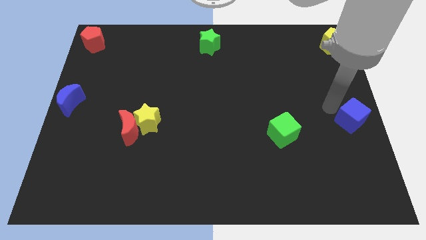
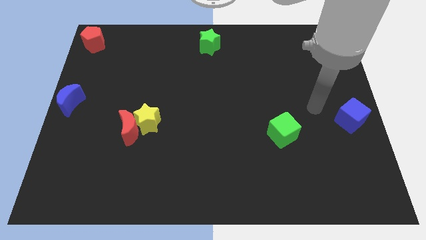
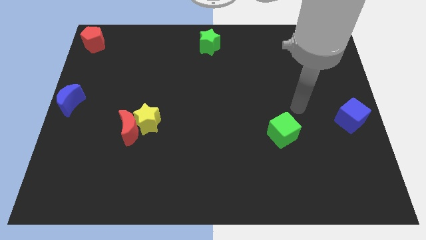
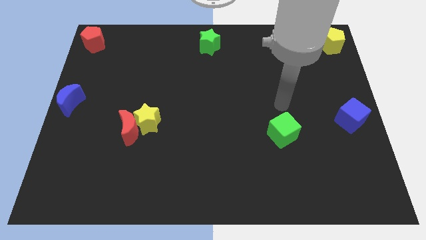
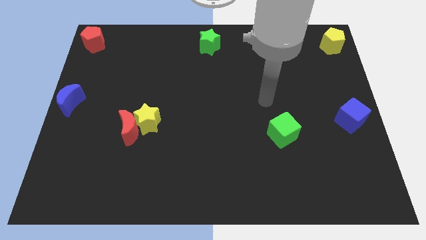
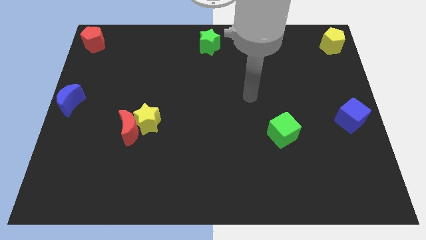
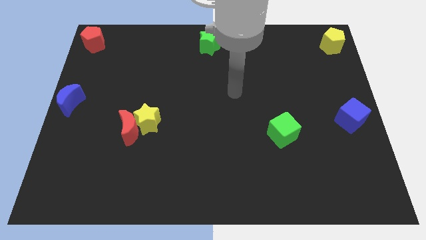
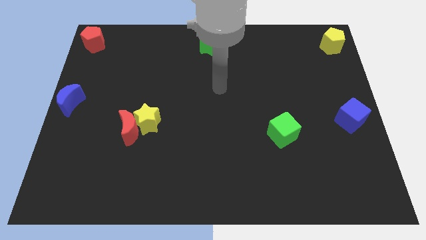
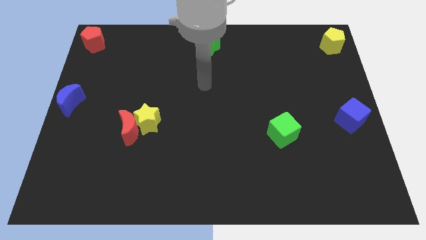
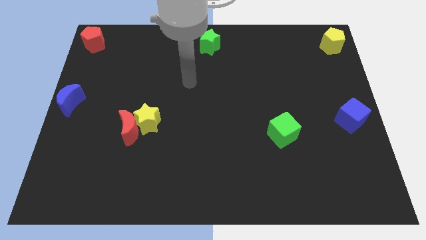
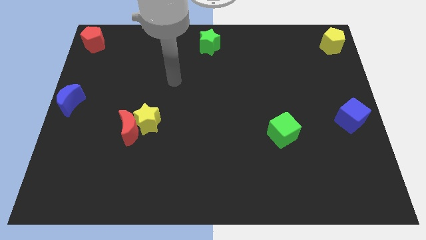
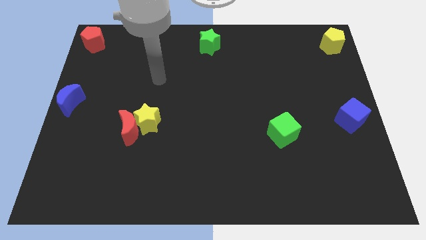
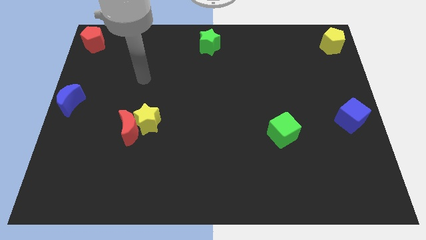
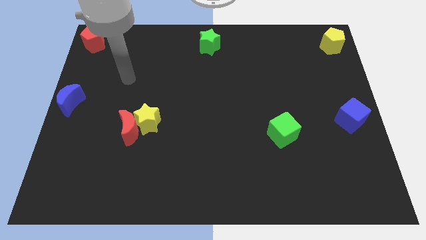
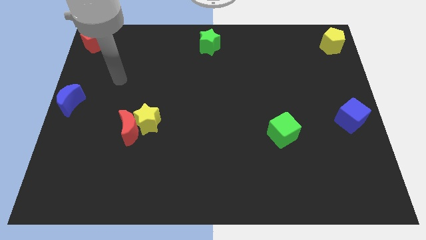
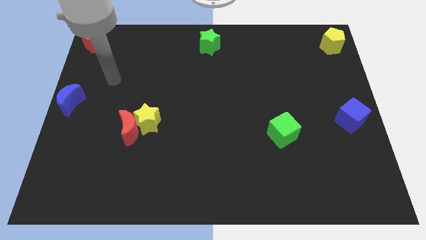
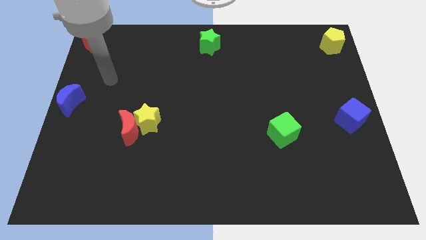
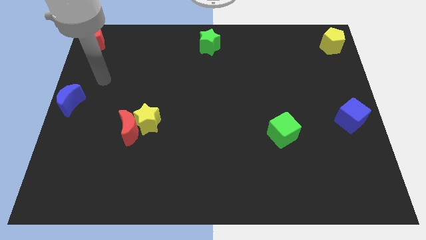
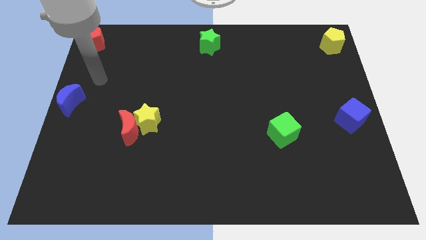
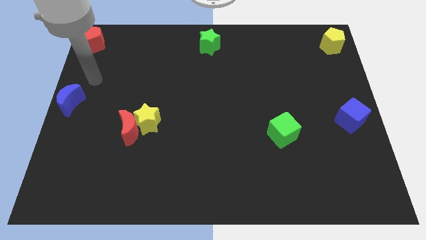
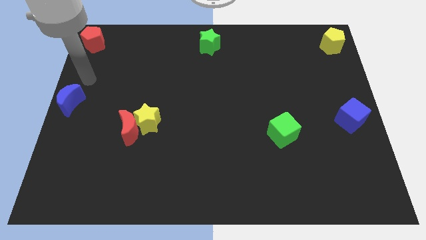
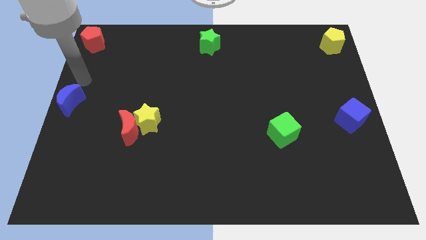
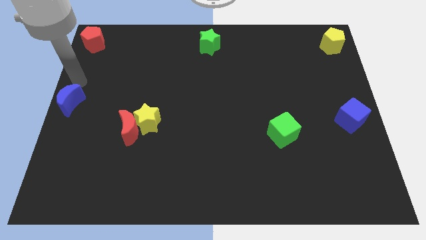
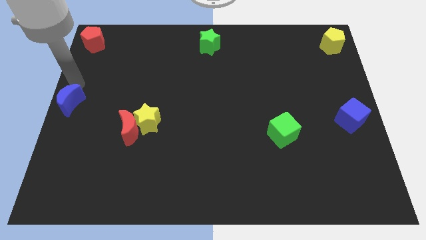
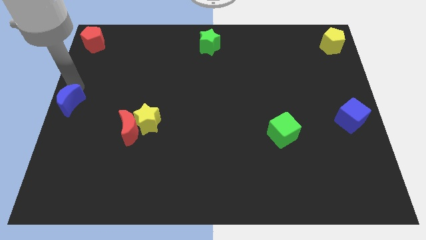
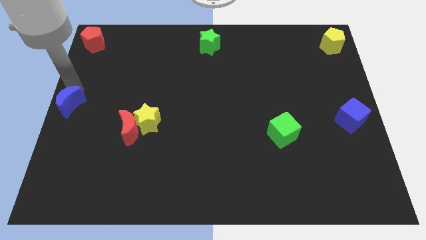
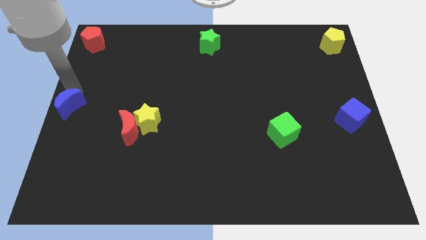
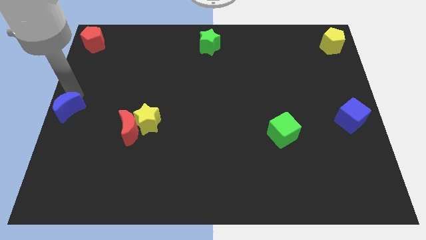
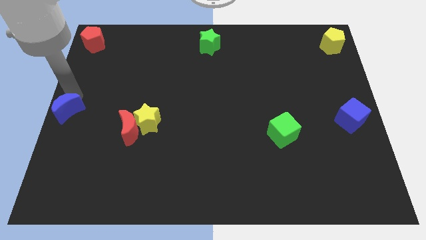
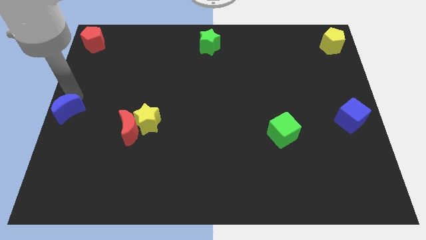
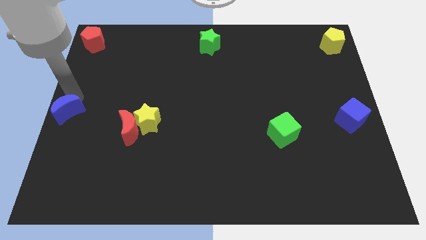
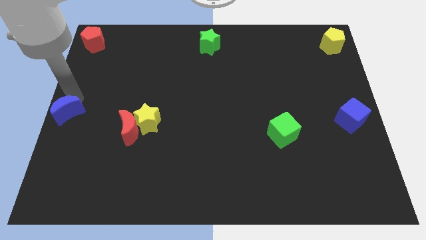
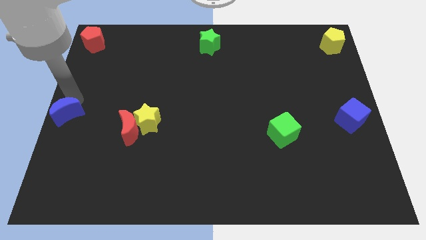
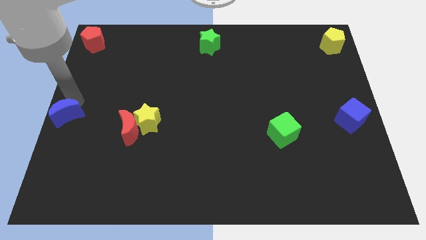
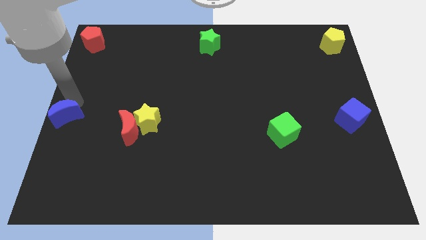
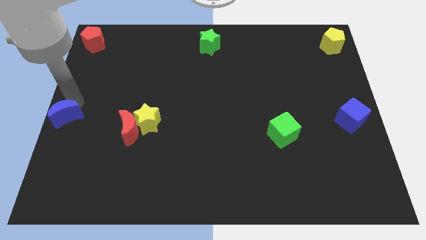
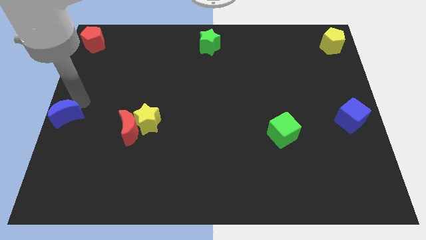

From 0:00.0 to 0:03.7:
move the blue moon downward

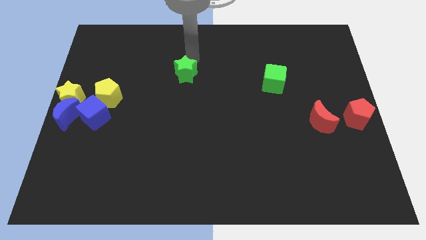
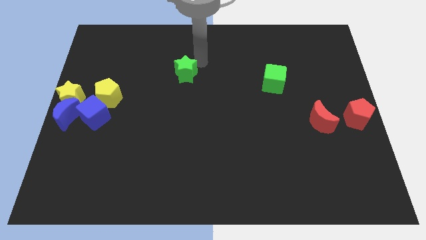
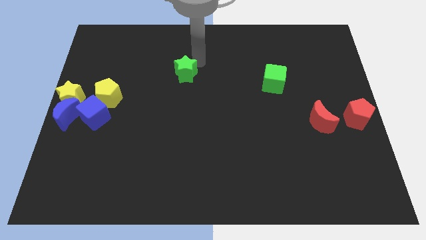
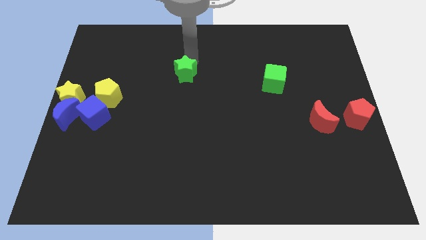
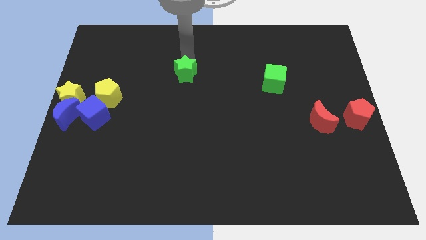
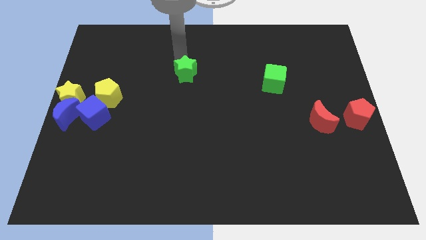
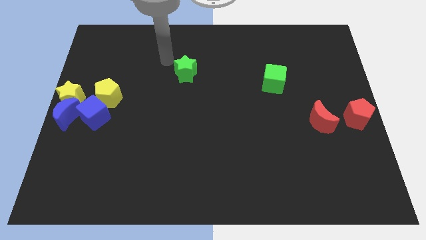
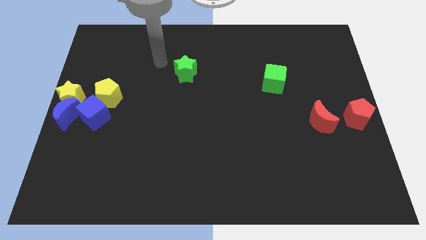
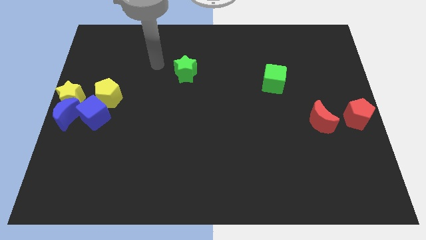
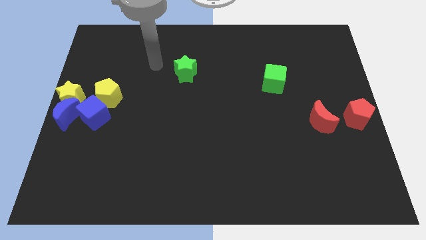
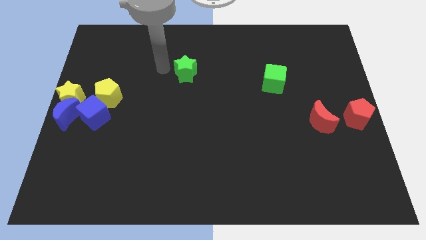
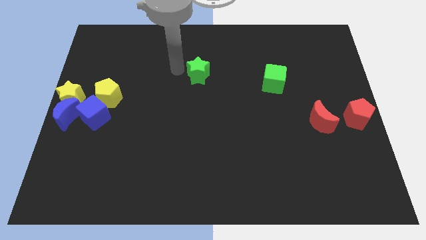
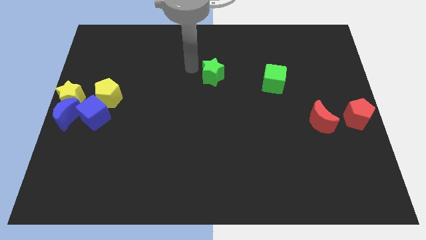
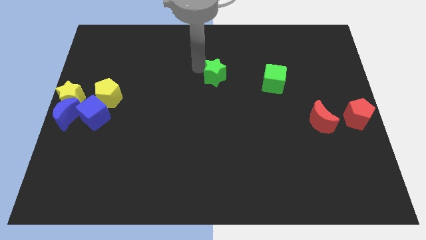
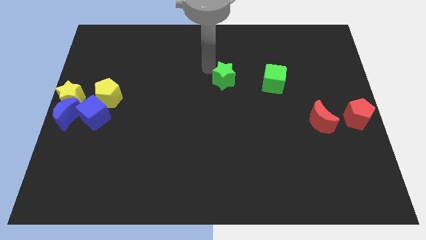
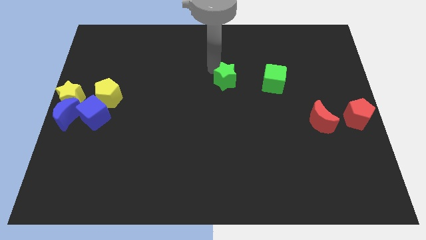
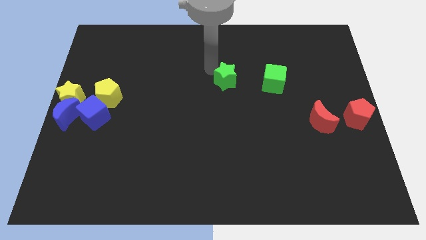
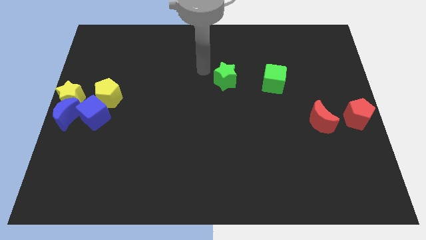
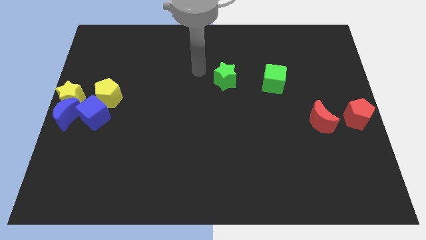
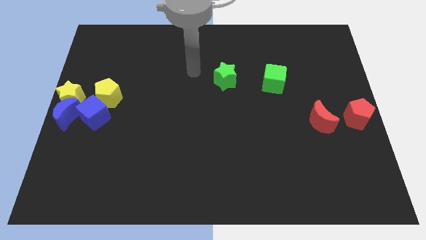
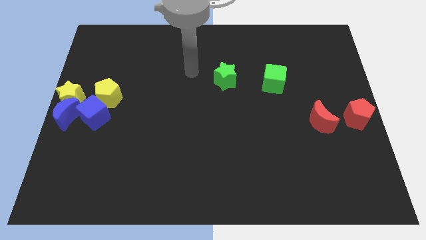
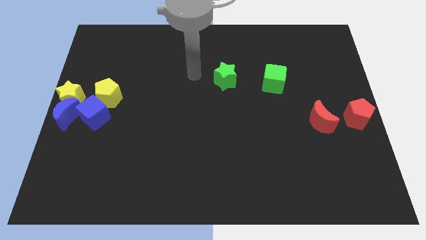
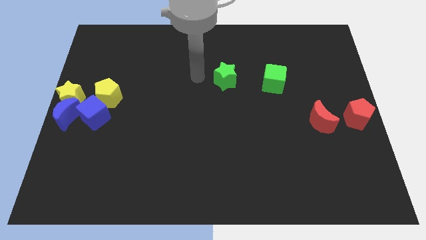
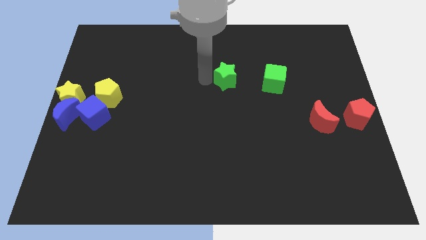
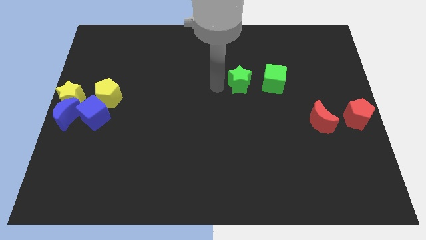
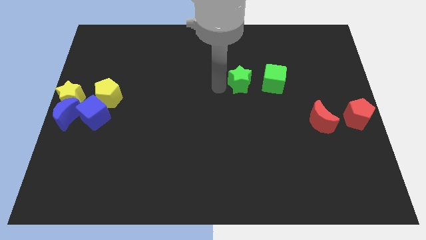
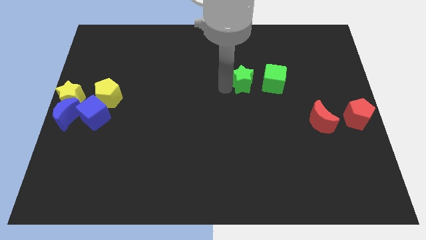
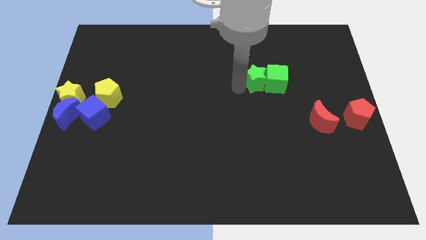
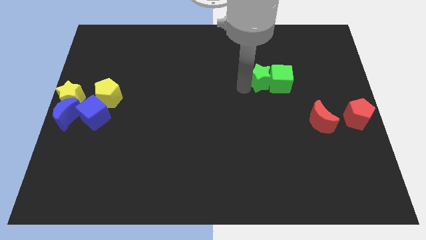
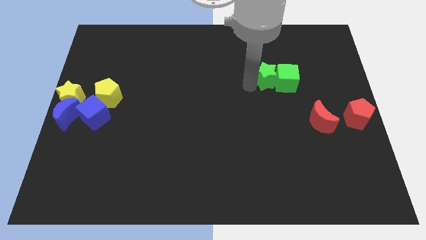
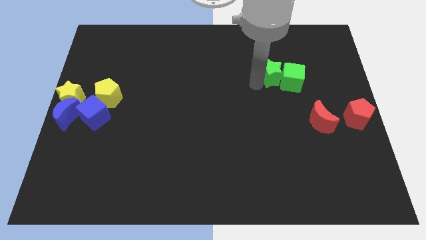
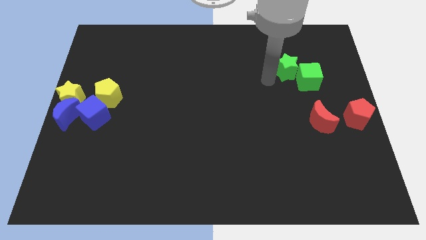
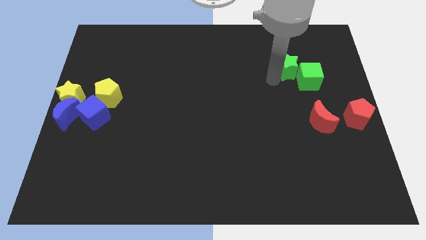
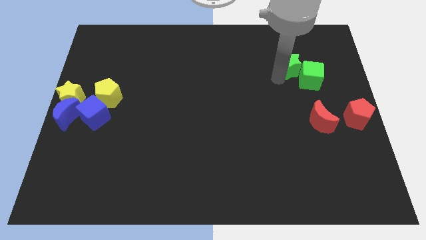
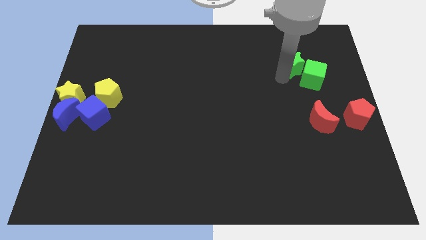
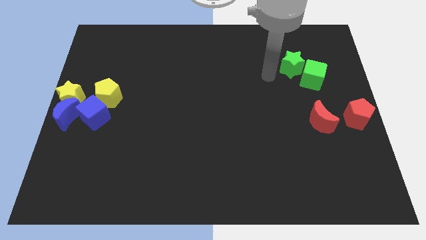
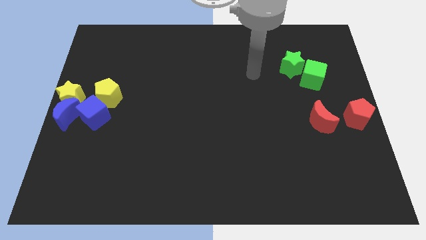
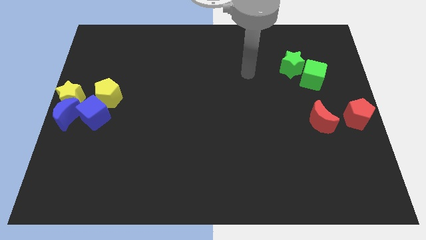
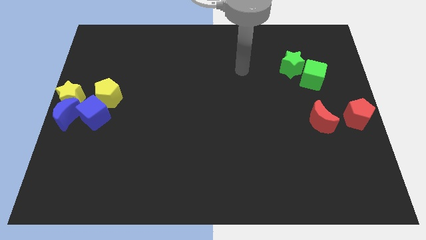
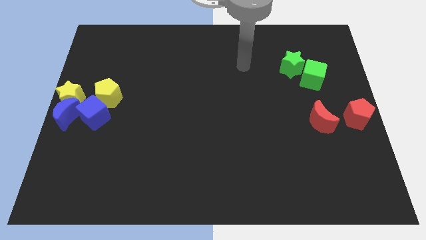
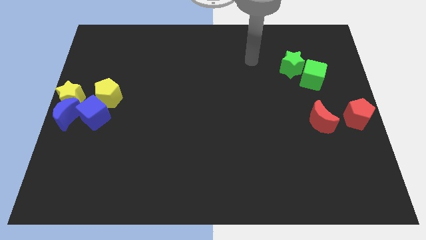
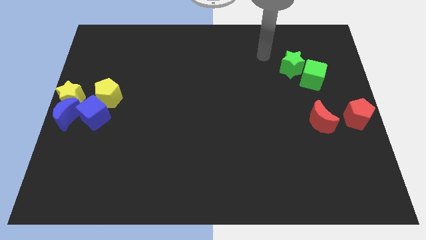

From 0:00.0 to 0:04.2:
push the green star into the left side of the green cube

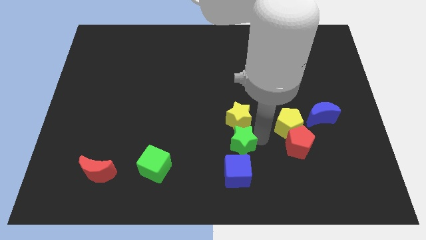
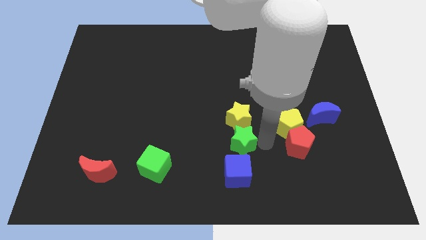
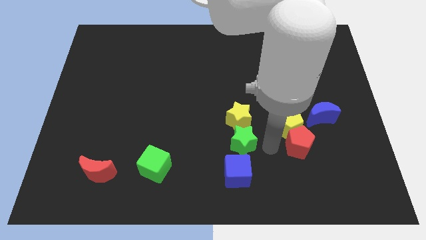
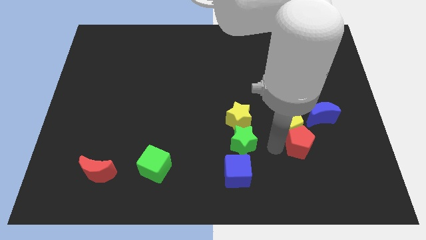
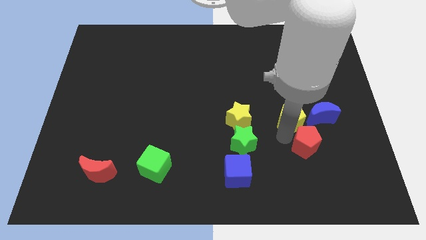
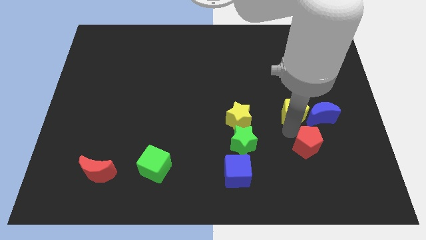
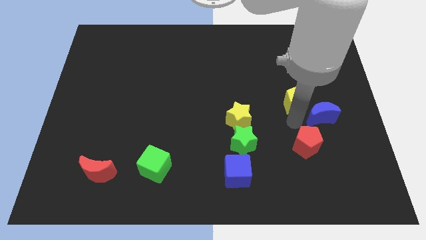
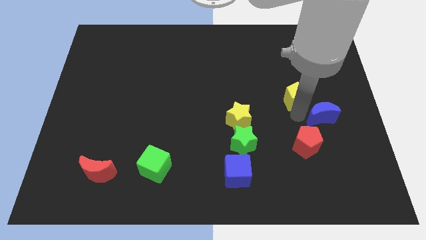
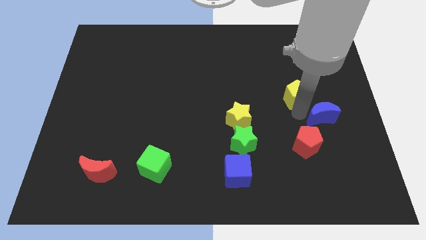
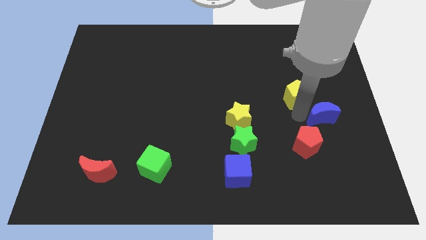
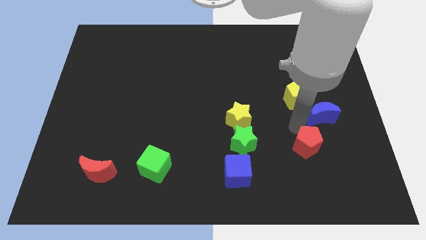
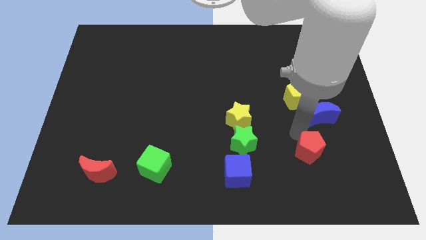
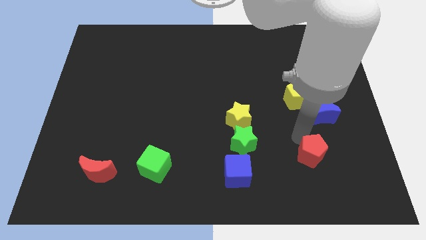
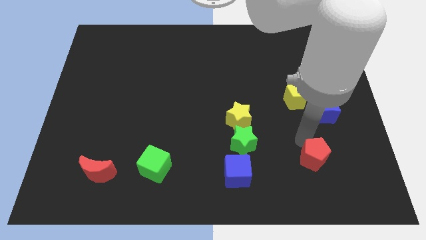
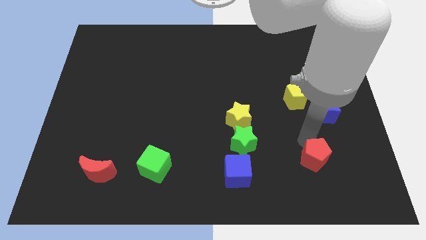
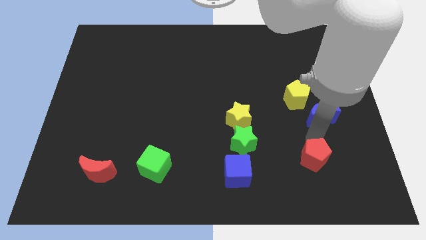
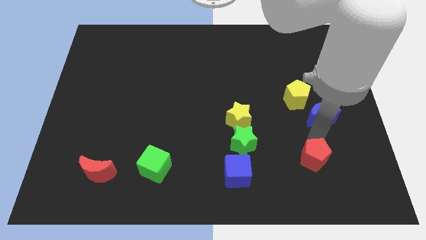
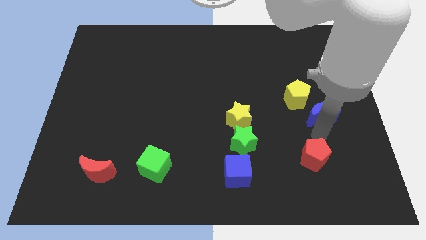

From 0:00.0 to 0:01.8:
seperate the red pentagon and yellow pentagon
